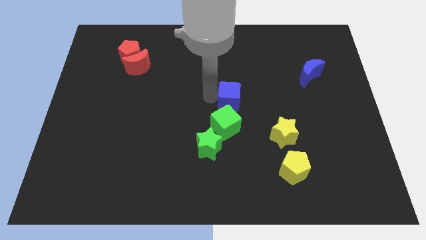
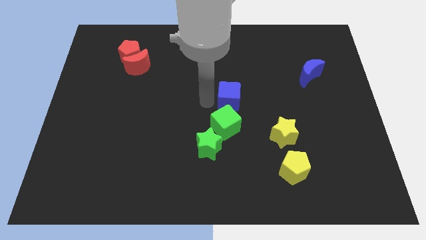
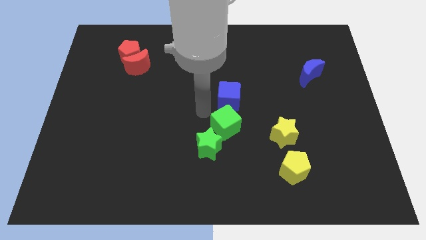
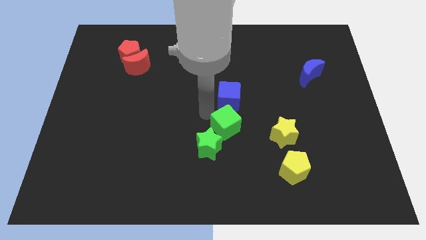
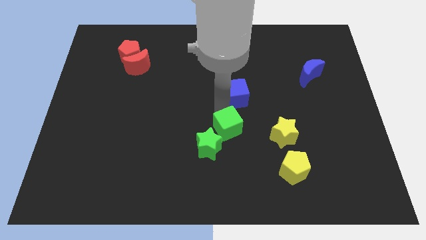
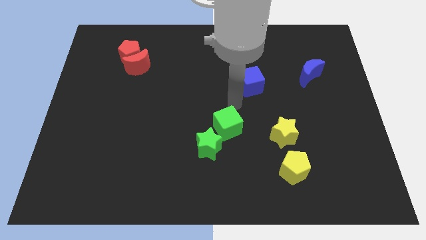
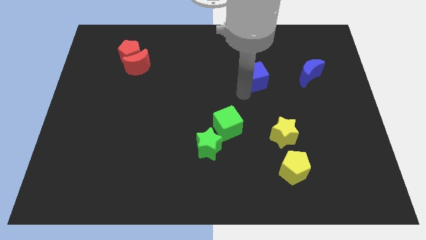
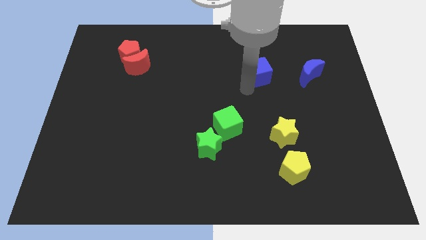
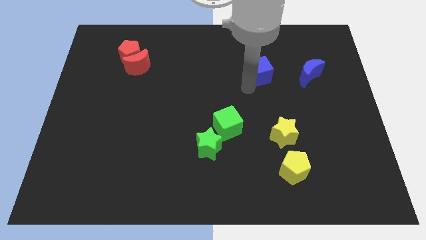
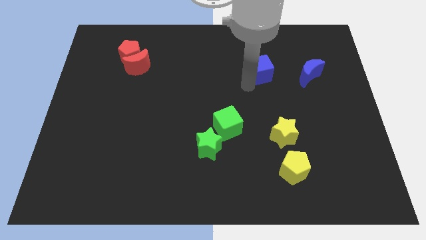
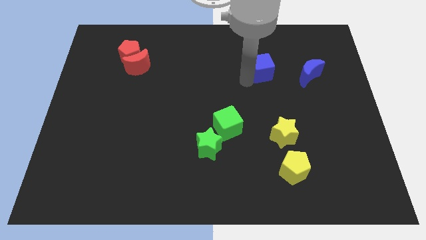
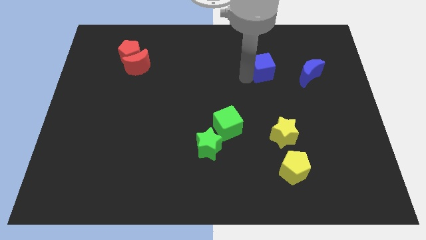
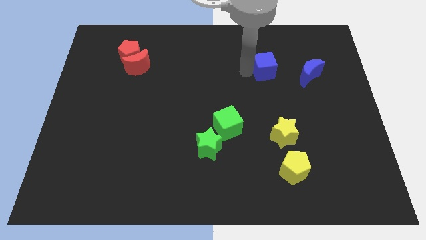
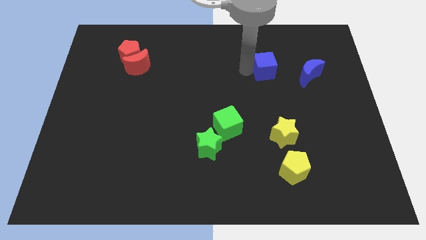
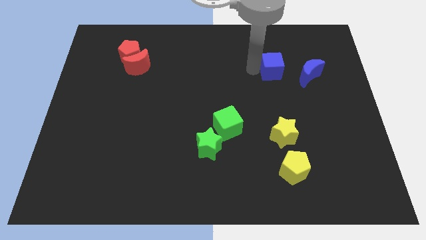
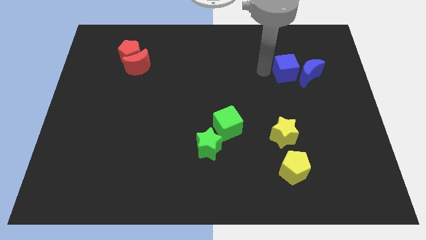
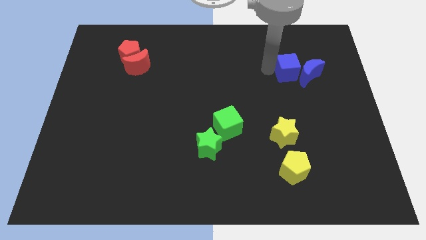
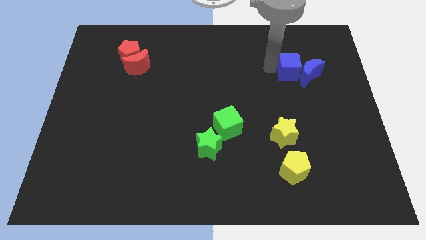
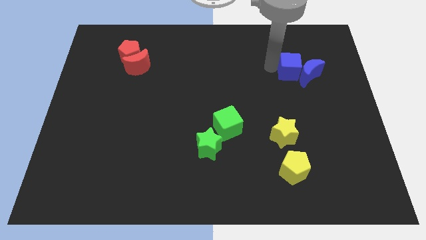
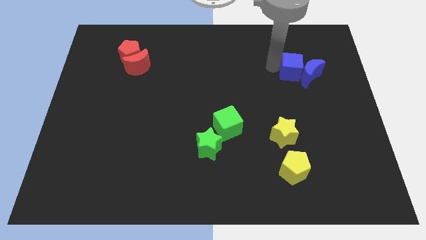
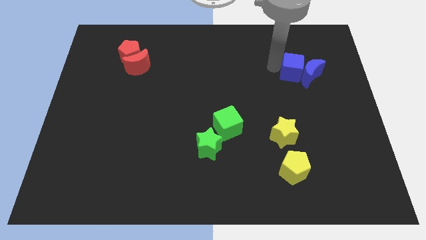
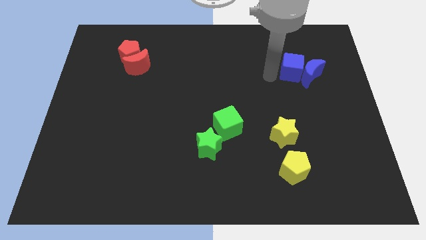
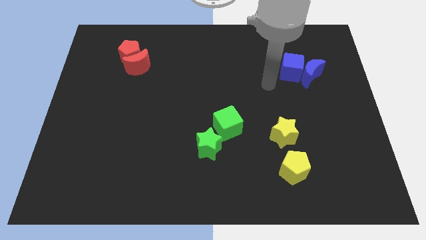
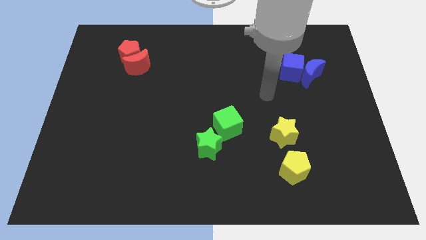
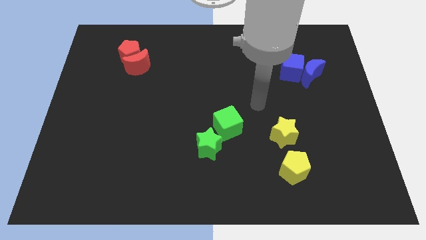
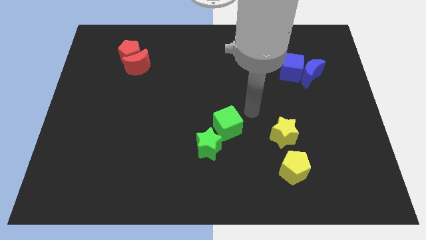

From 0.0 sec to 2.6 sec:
push blue block into blue crescent

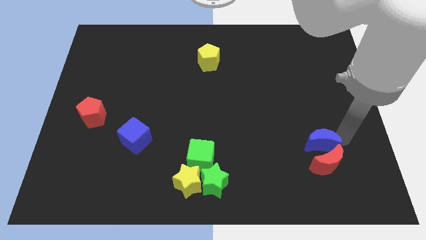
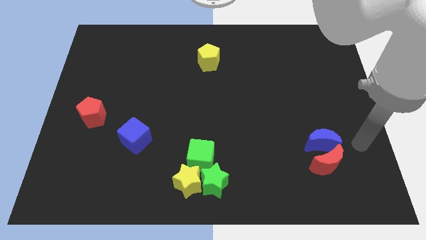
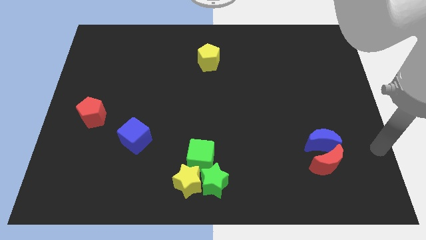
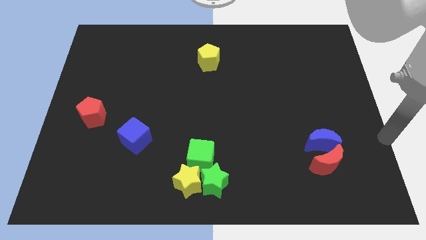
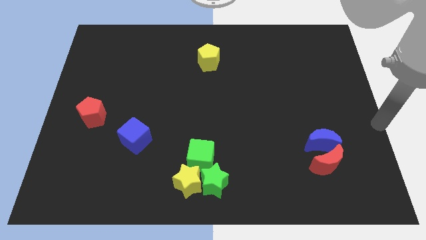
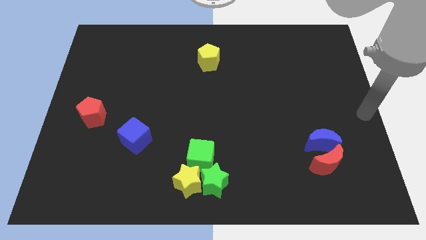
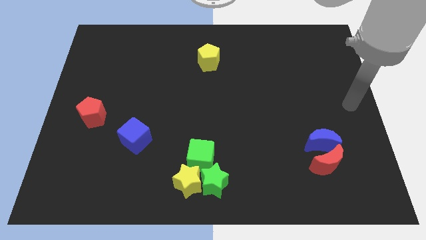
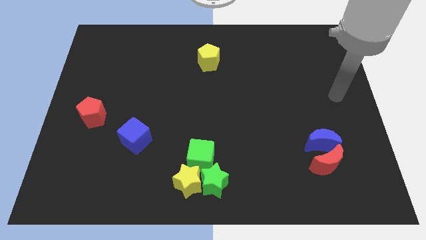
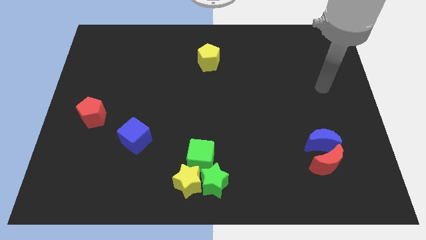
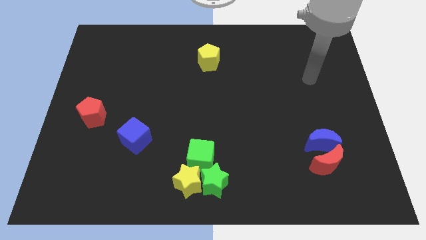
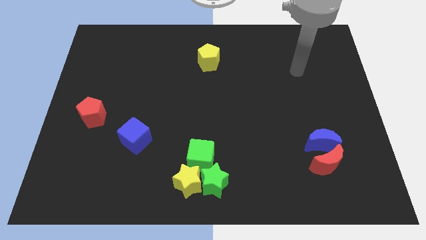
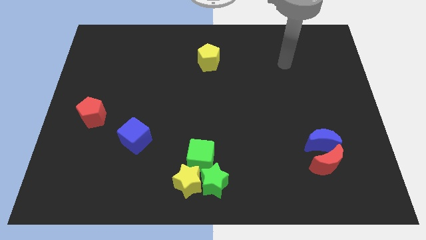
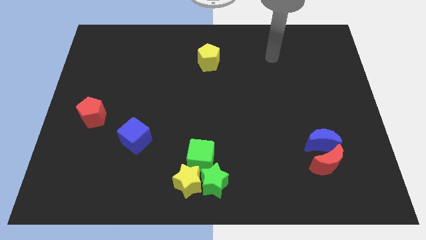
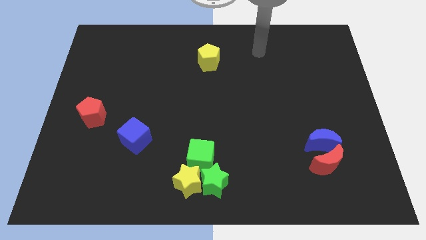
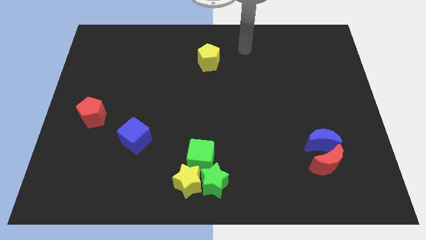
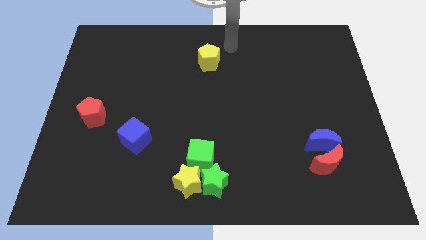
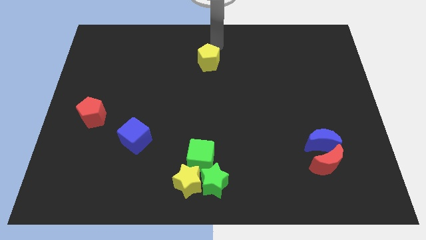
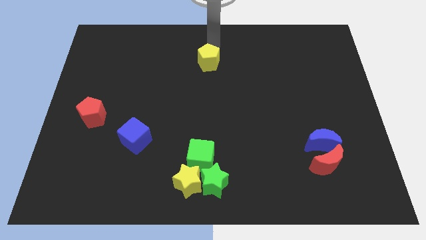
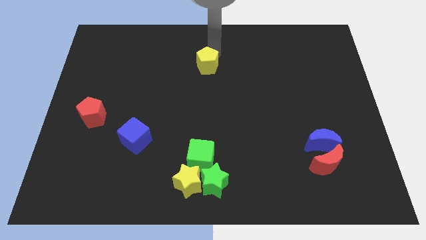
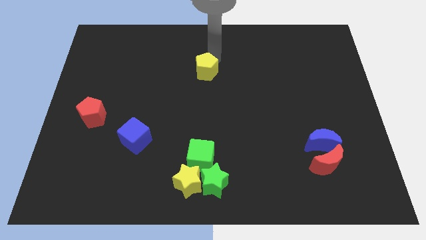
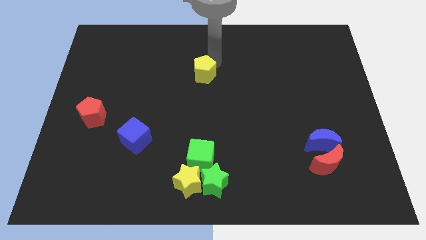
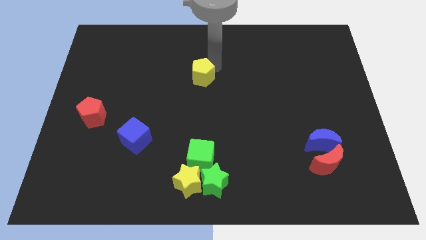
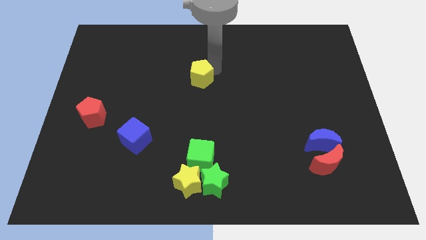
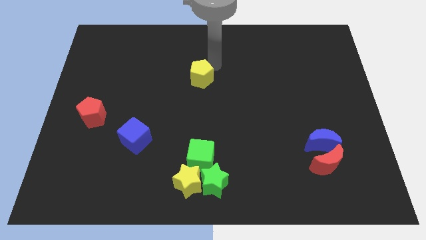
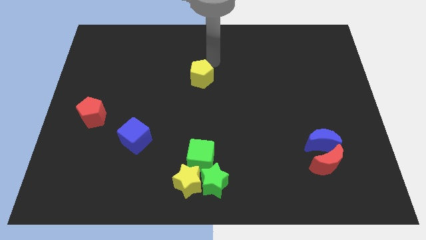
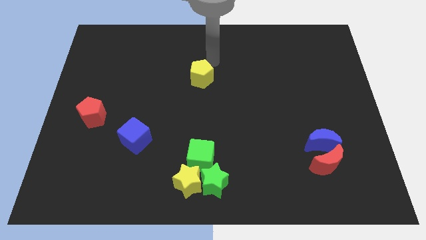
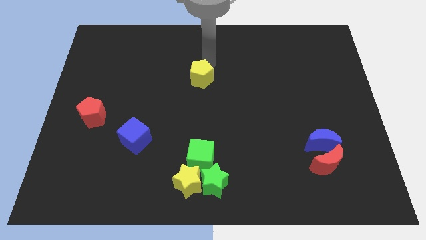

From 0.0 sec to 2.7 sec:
push the yellow pentagon towards the center of the board

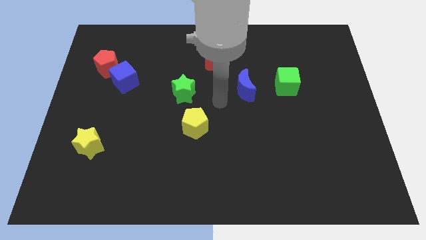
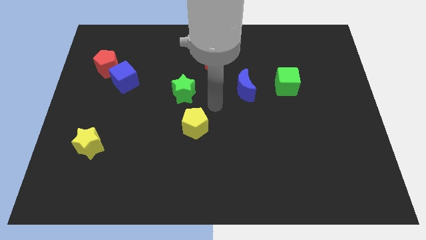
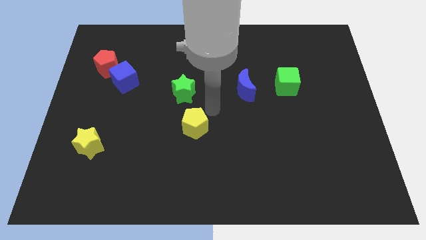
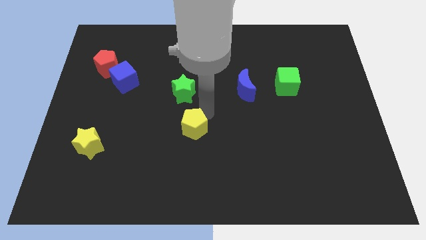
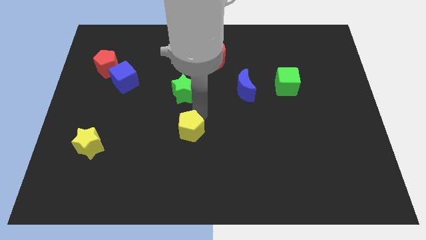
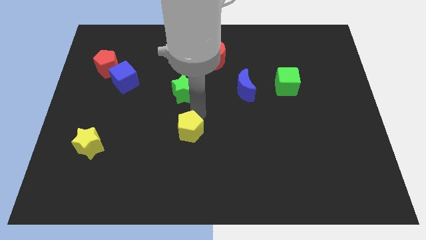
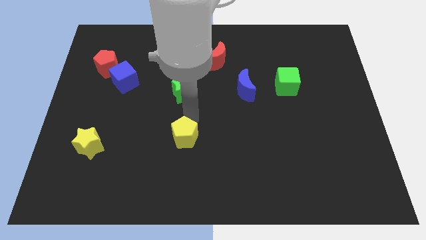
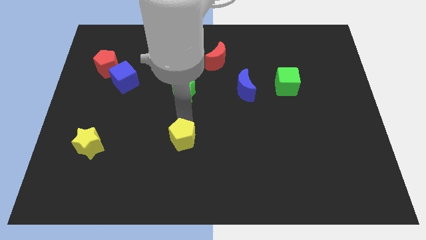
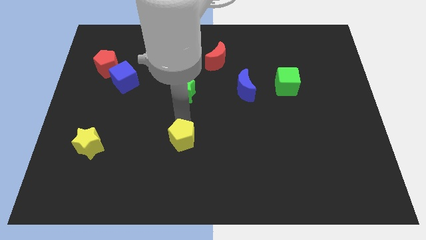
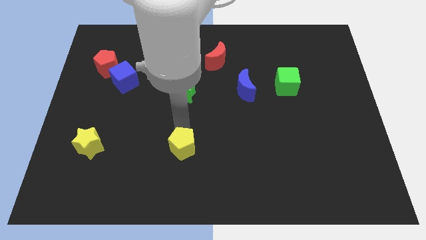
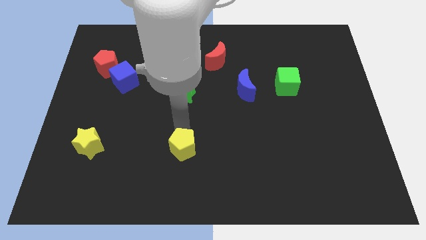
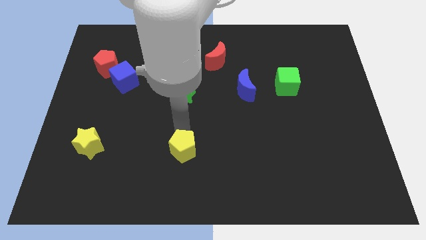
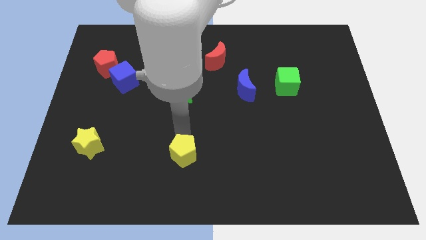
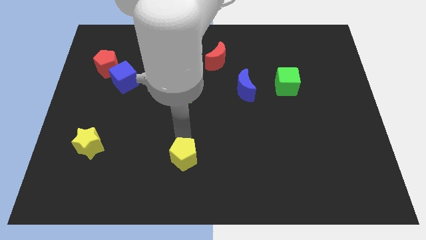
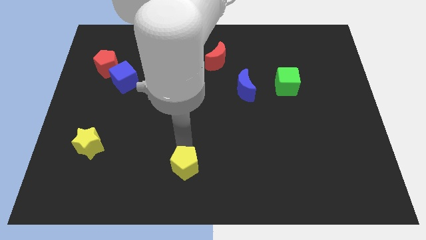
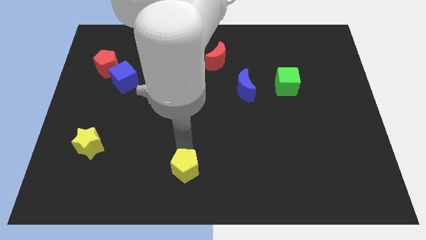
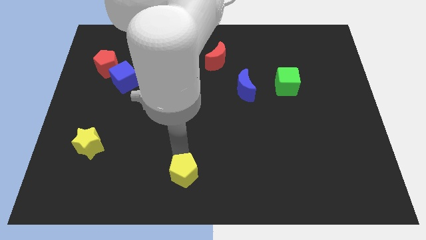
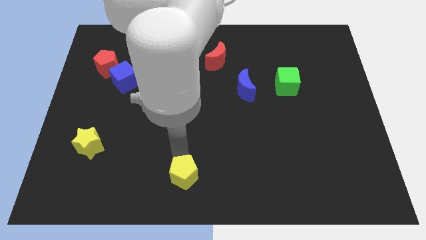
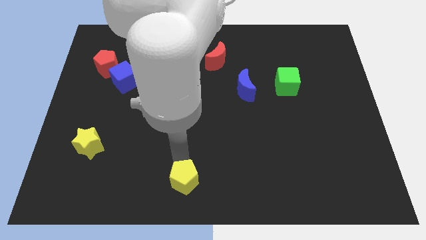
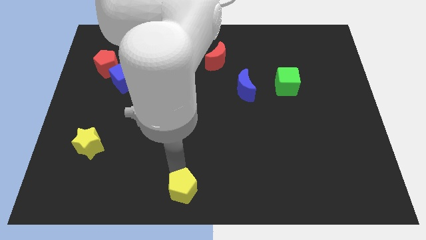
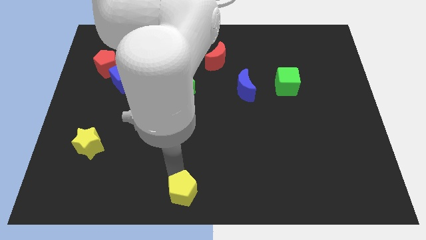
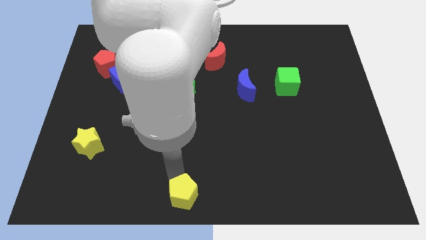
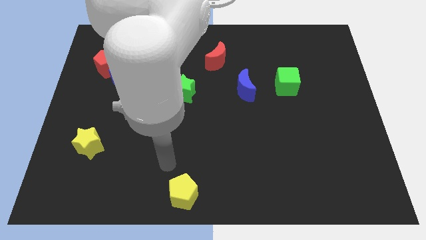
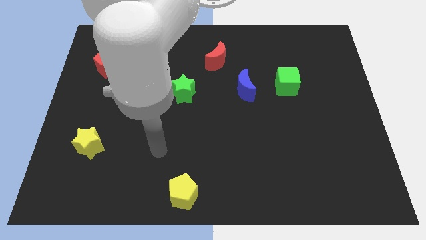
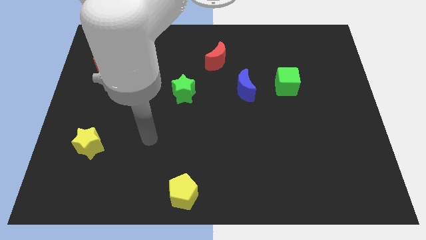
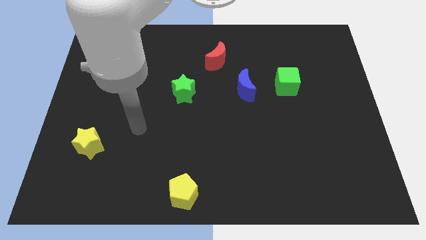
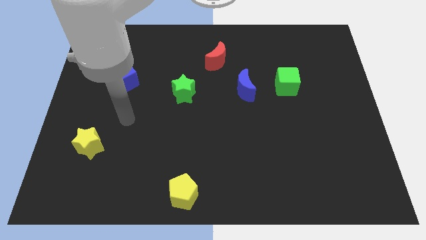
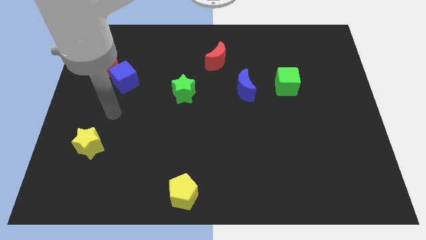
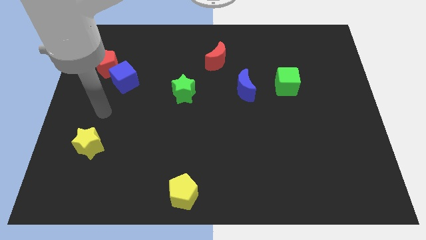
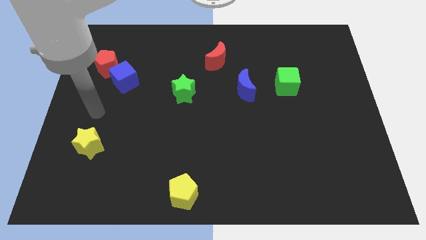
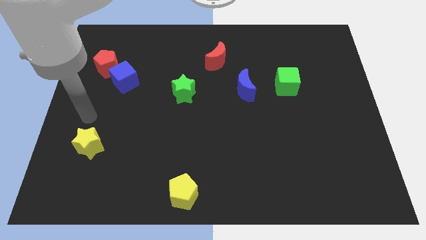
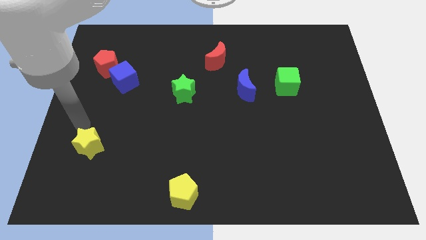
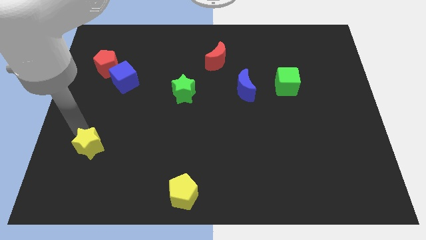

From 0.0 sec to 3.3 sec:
push the yellow pentagon to the bottom center

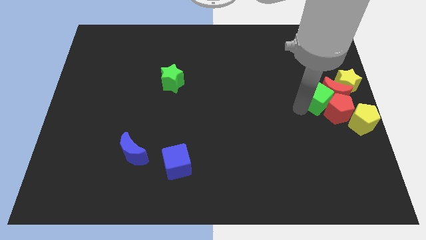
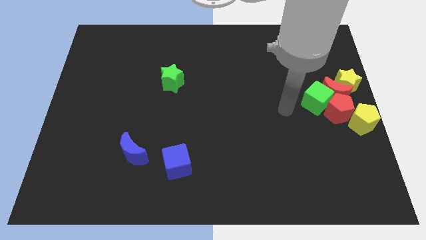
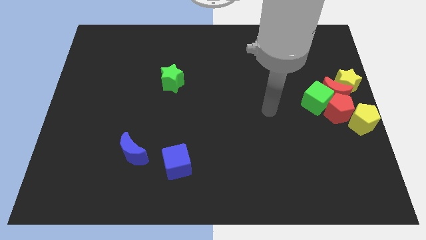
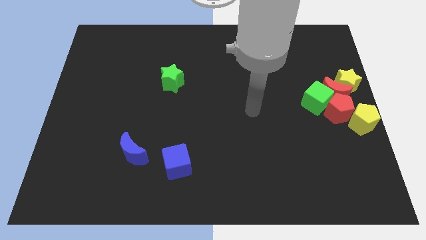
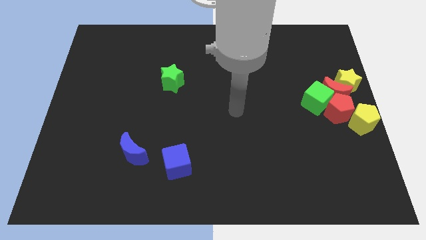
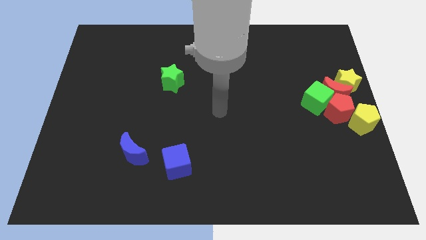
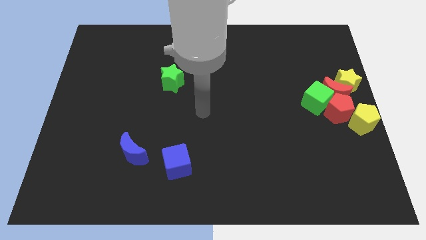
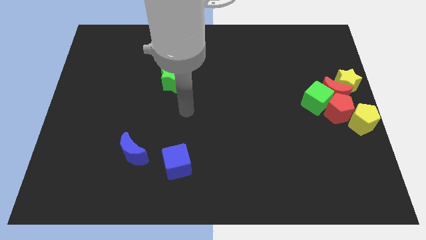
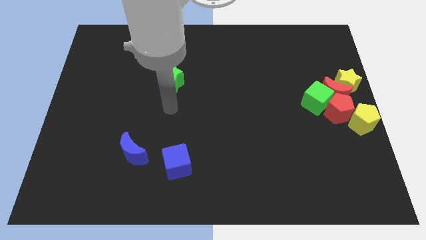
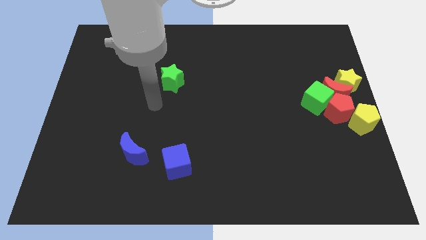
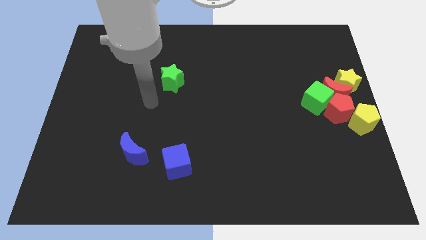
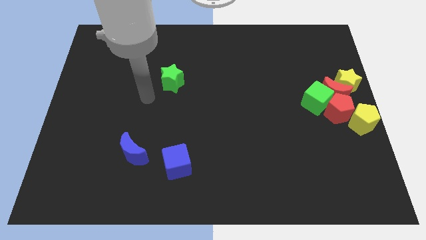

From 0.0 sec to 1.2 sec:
move arm away from the green cube
